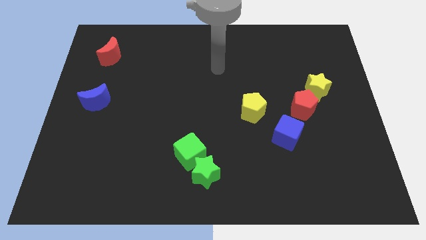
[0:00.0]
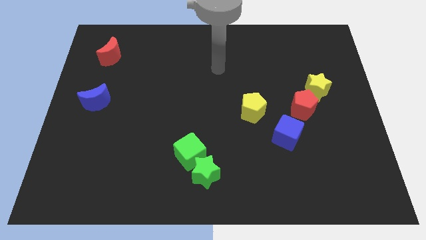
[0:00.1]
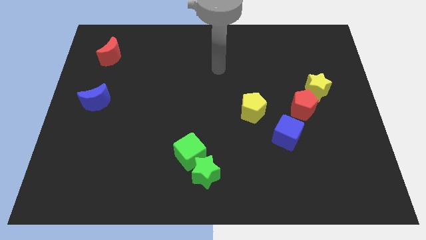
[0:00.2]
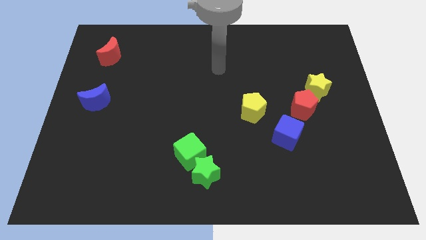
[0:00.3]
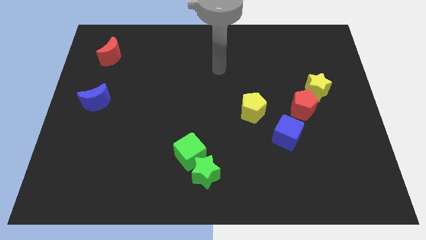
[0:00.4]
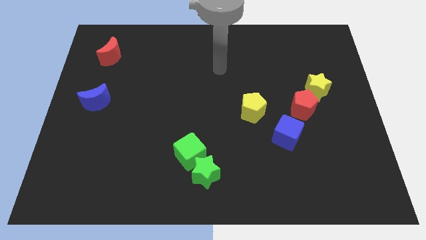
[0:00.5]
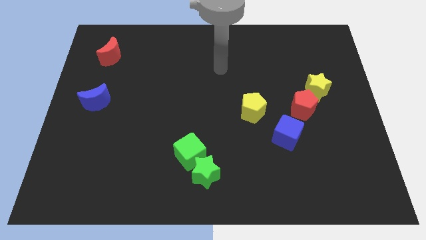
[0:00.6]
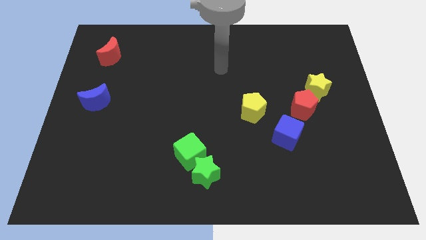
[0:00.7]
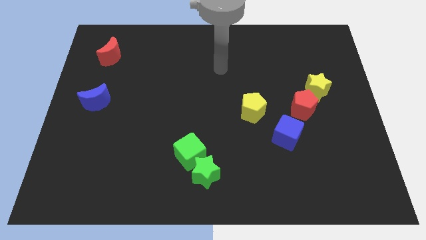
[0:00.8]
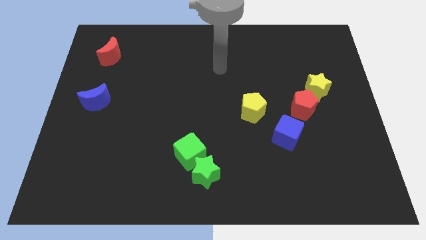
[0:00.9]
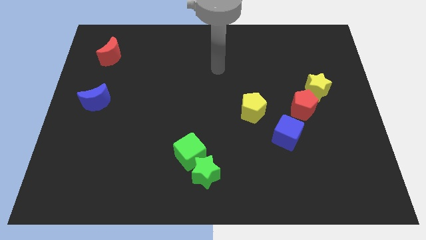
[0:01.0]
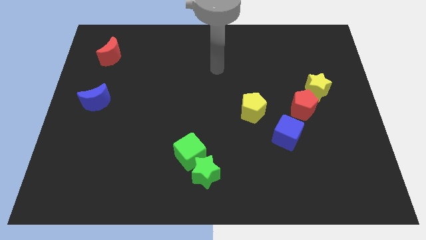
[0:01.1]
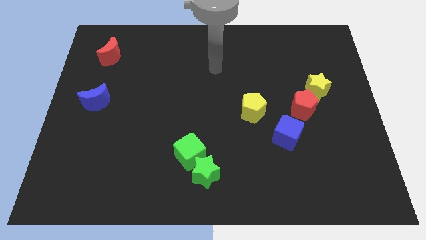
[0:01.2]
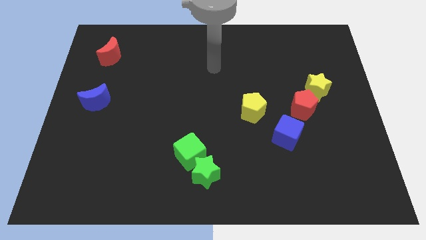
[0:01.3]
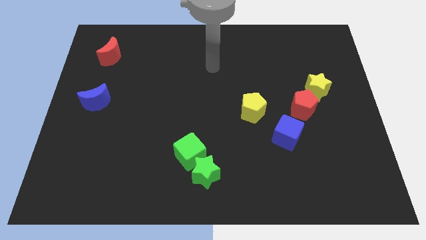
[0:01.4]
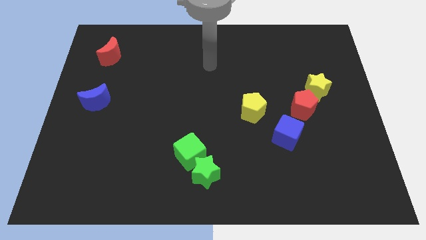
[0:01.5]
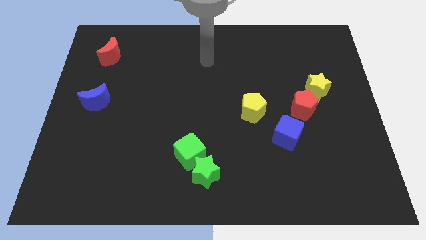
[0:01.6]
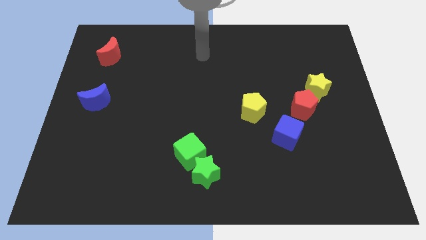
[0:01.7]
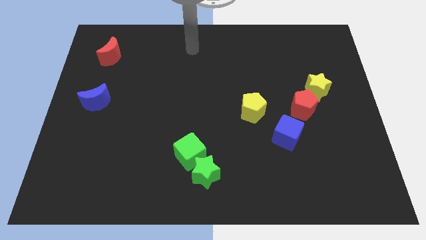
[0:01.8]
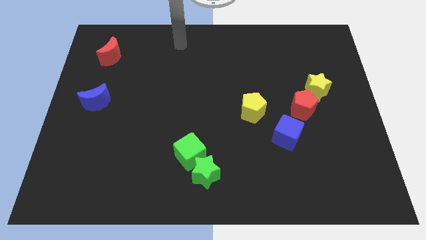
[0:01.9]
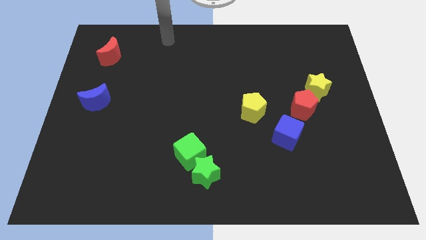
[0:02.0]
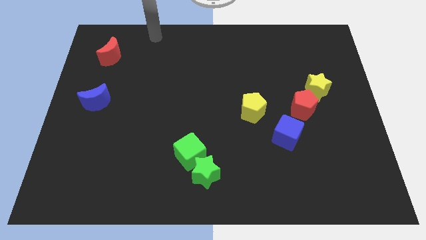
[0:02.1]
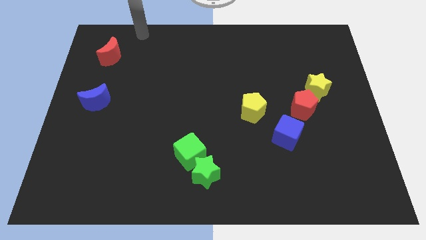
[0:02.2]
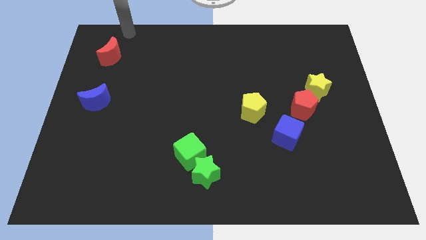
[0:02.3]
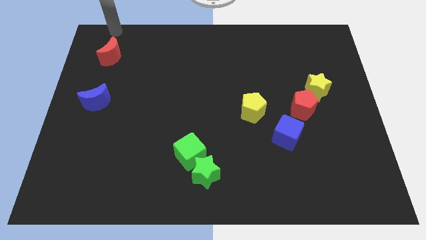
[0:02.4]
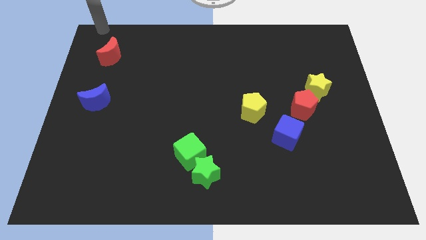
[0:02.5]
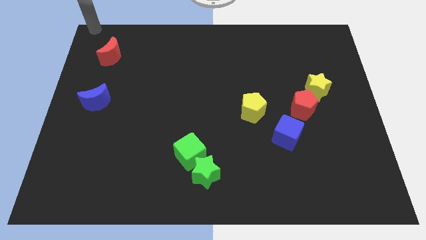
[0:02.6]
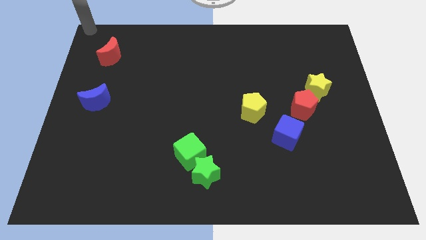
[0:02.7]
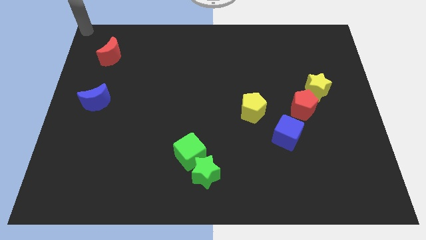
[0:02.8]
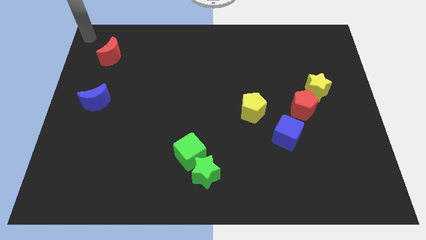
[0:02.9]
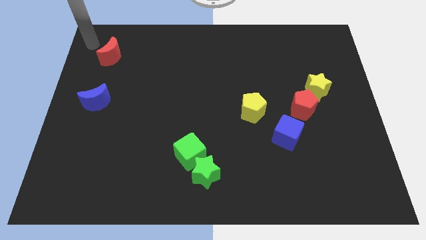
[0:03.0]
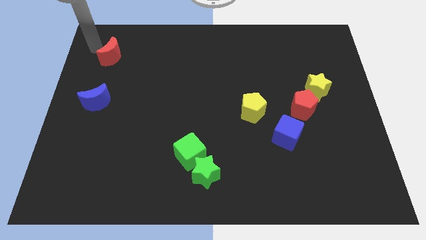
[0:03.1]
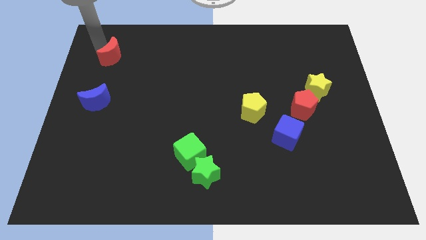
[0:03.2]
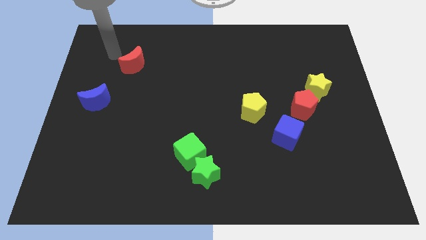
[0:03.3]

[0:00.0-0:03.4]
move the red crescent slightly to the right side

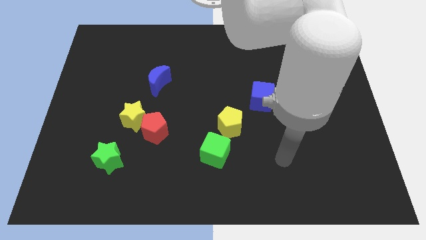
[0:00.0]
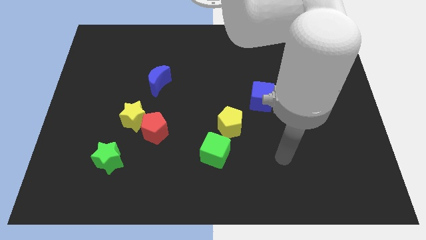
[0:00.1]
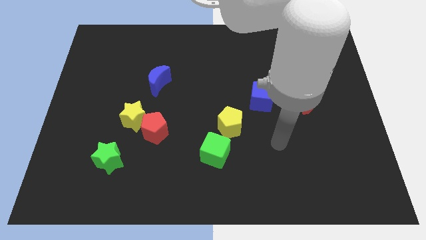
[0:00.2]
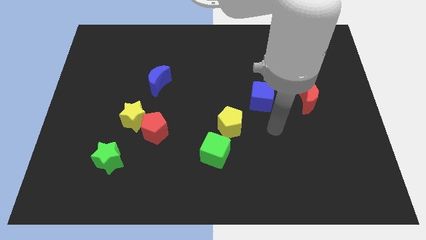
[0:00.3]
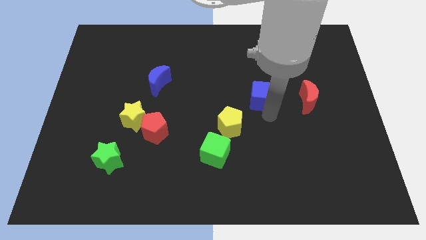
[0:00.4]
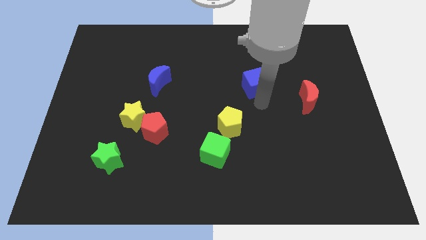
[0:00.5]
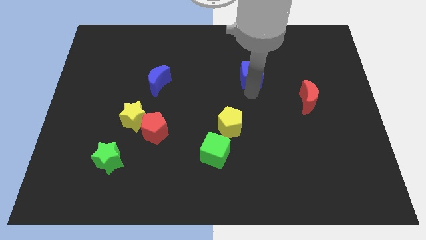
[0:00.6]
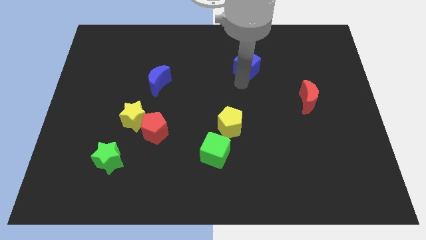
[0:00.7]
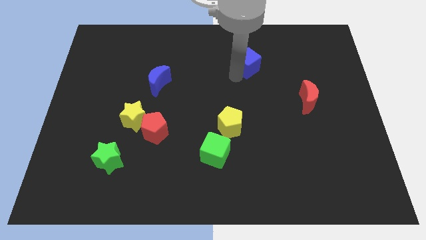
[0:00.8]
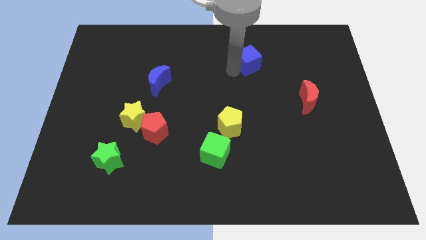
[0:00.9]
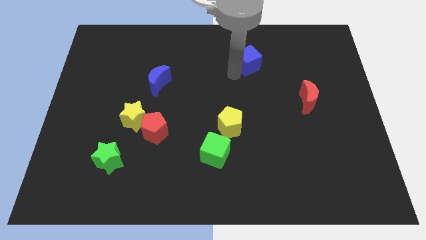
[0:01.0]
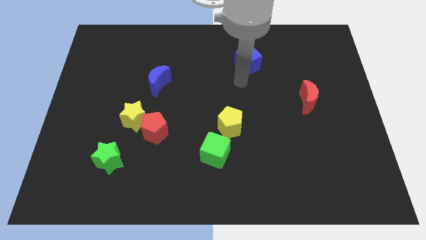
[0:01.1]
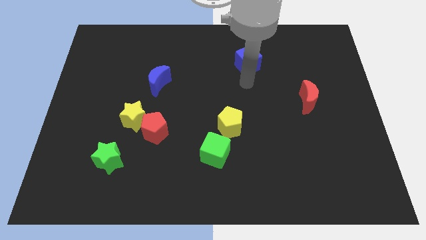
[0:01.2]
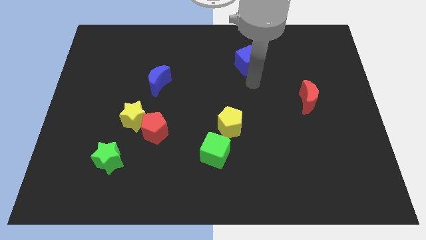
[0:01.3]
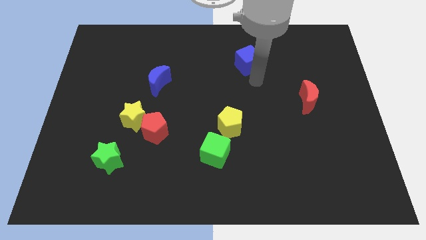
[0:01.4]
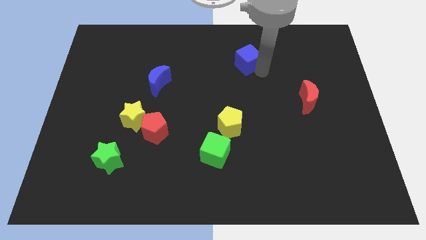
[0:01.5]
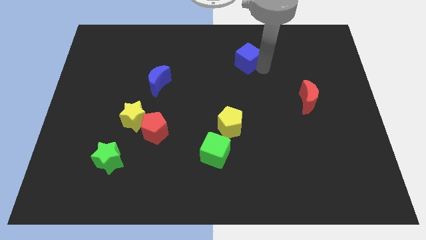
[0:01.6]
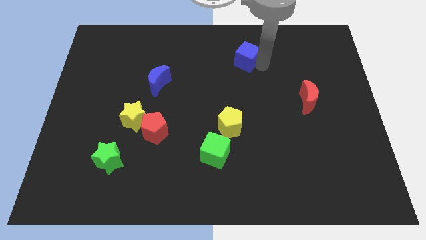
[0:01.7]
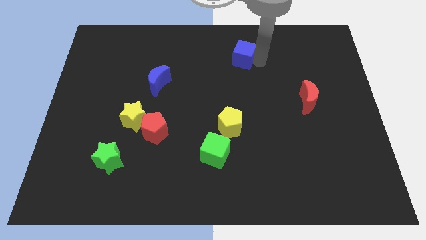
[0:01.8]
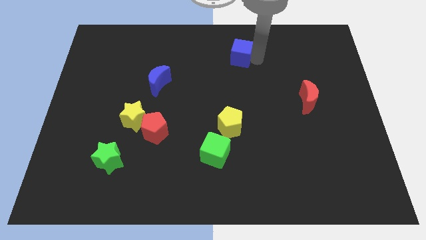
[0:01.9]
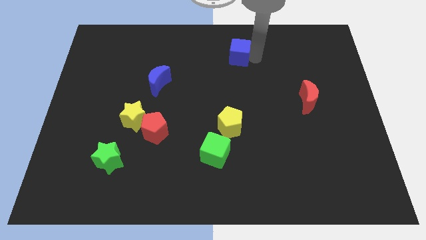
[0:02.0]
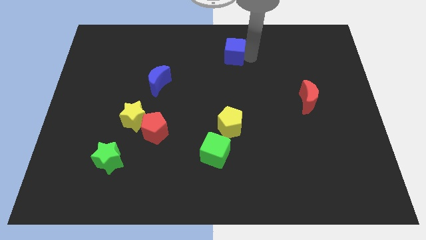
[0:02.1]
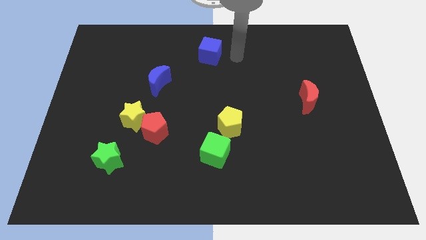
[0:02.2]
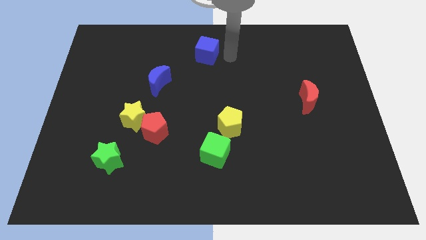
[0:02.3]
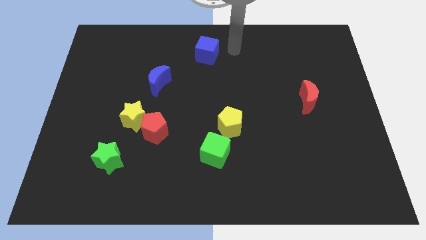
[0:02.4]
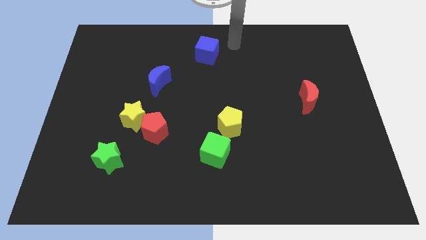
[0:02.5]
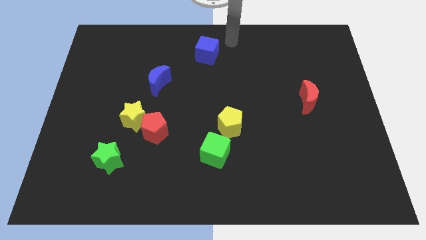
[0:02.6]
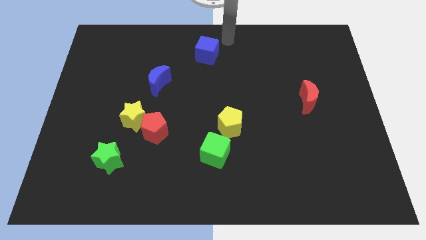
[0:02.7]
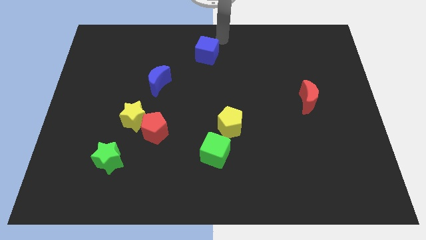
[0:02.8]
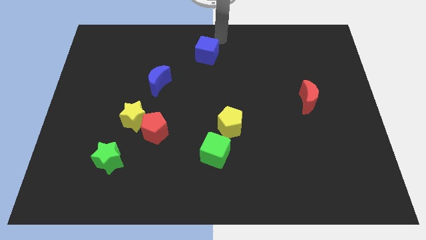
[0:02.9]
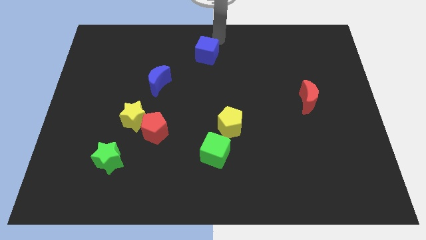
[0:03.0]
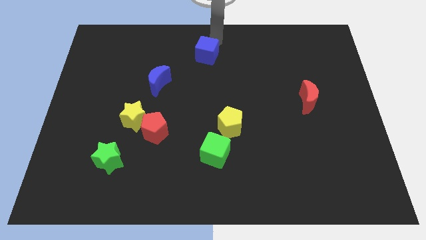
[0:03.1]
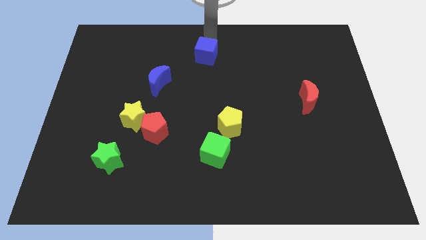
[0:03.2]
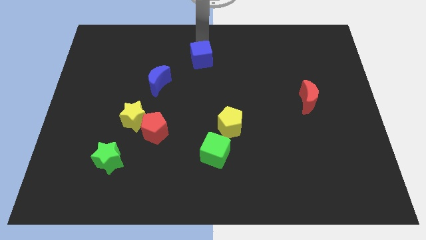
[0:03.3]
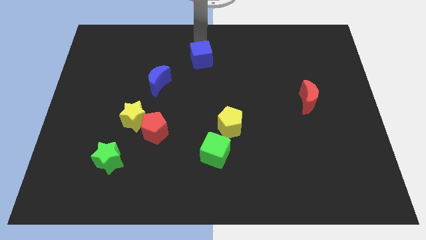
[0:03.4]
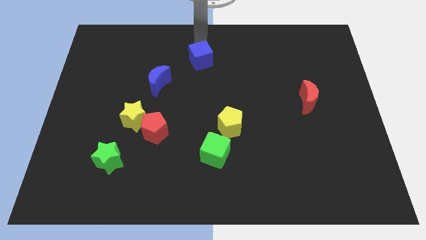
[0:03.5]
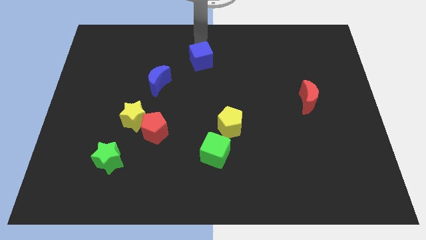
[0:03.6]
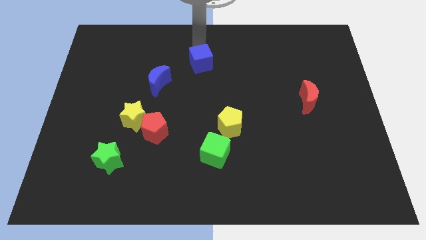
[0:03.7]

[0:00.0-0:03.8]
place the blue cube diagonally top right to the blue moon

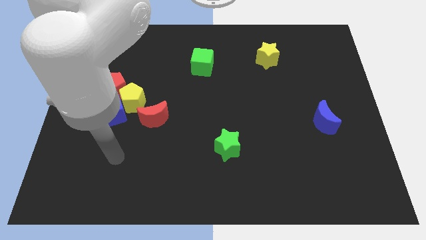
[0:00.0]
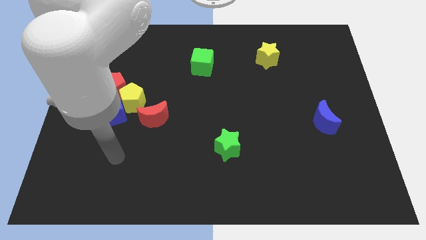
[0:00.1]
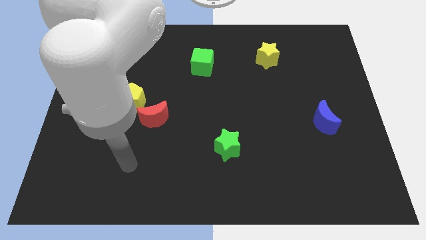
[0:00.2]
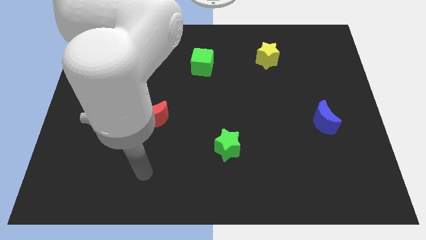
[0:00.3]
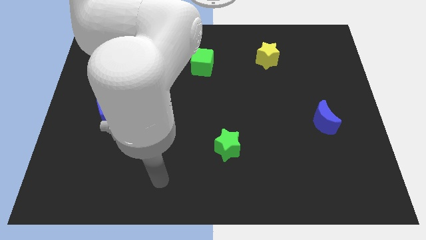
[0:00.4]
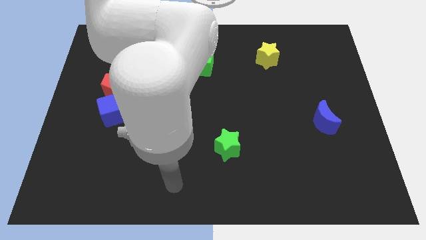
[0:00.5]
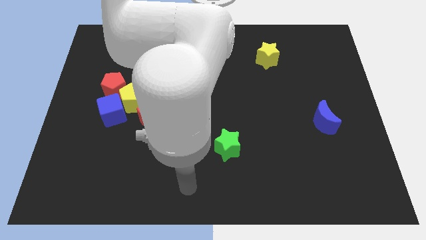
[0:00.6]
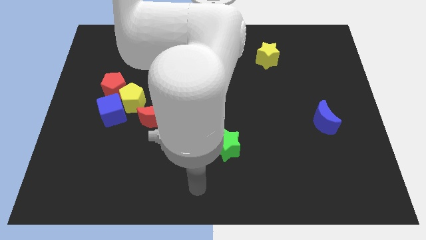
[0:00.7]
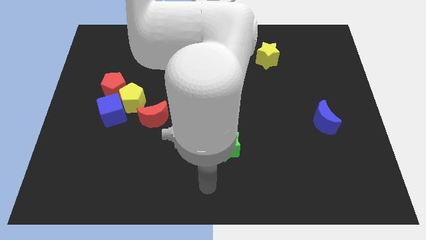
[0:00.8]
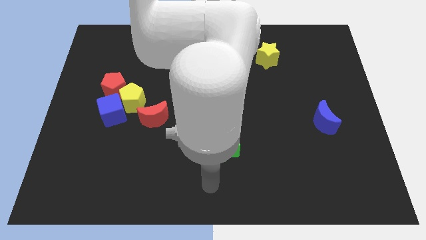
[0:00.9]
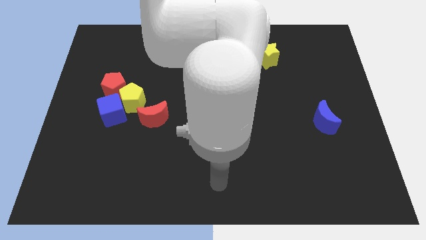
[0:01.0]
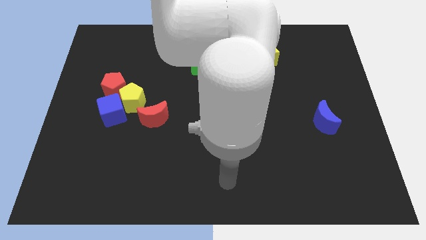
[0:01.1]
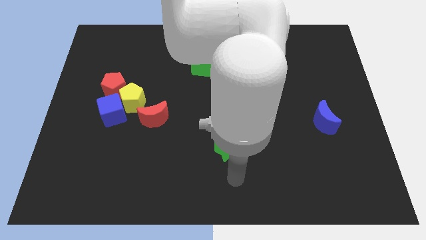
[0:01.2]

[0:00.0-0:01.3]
place the arm below the green star

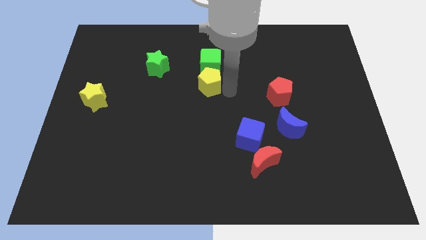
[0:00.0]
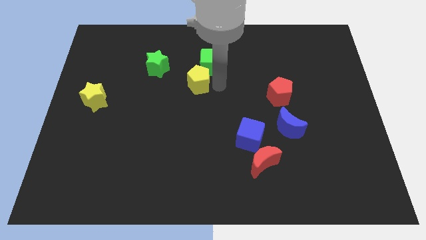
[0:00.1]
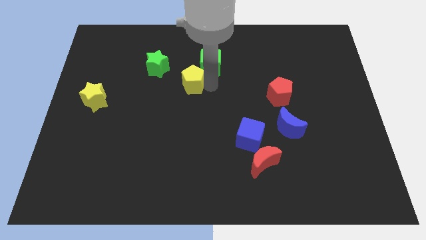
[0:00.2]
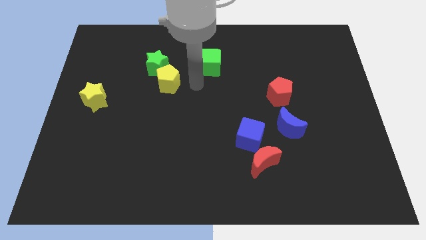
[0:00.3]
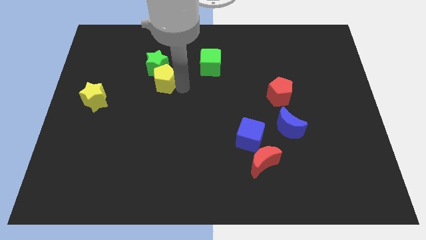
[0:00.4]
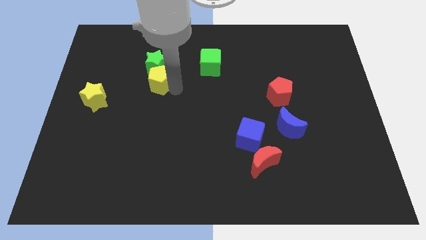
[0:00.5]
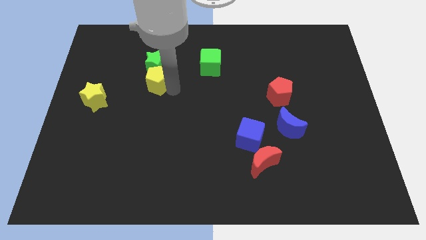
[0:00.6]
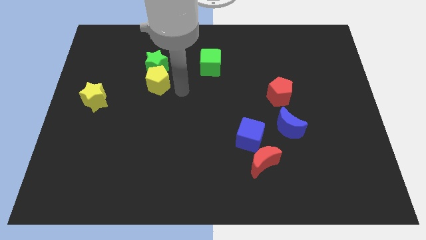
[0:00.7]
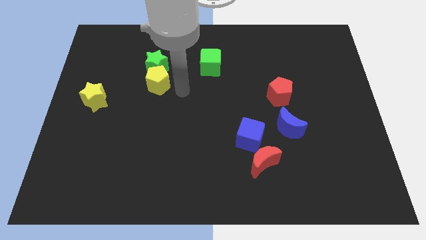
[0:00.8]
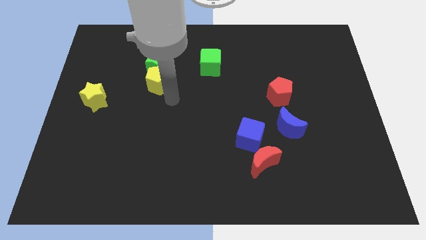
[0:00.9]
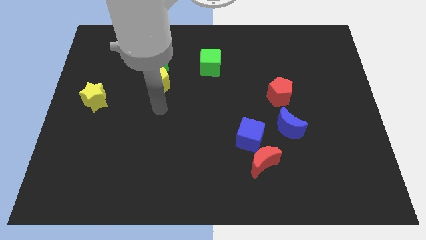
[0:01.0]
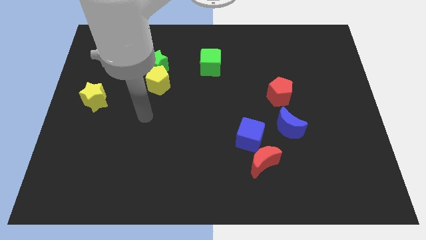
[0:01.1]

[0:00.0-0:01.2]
place the yellow pentagon right to the yellow star
